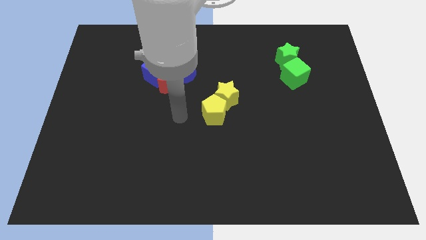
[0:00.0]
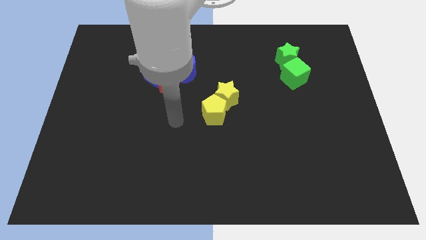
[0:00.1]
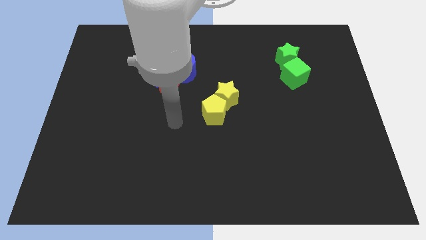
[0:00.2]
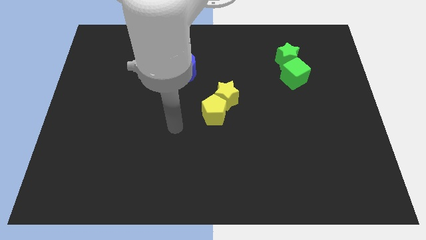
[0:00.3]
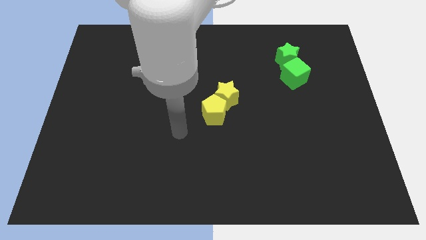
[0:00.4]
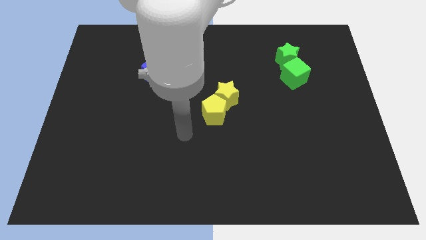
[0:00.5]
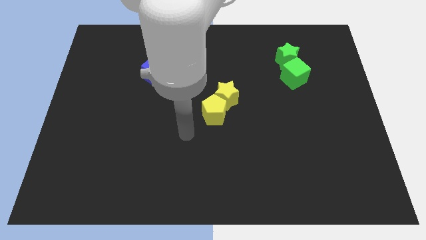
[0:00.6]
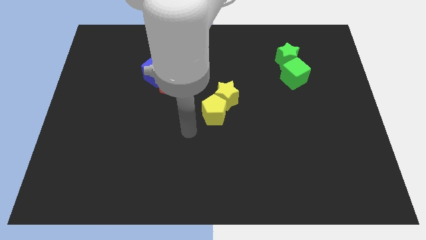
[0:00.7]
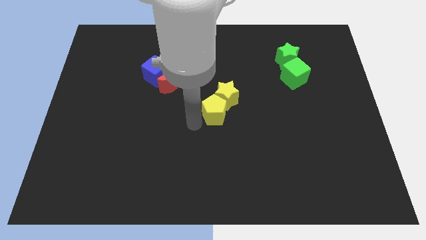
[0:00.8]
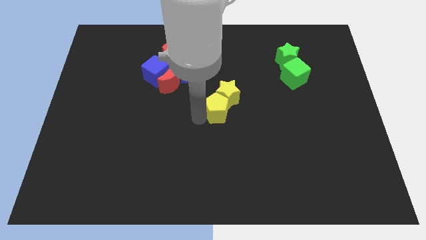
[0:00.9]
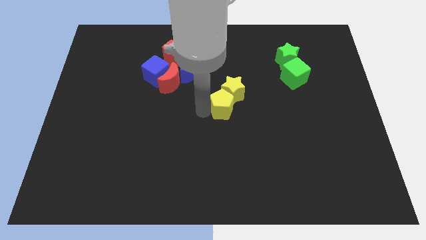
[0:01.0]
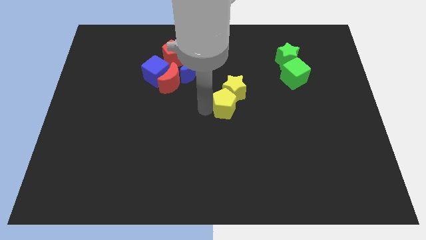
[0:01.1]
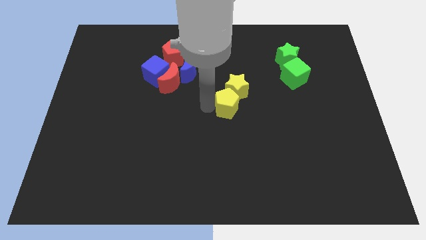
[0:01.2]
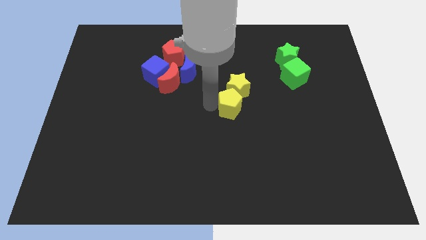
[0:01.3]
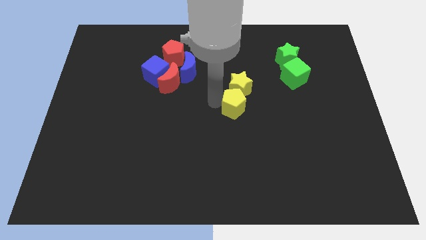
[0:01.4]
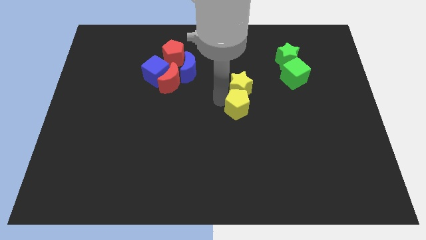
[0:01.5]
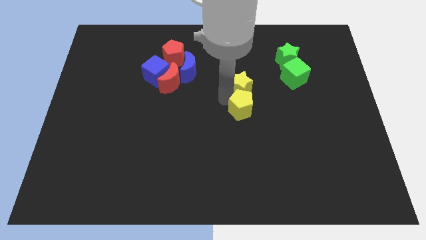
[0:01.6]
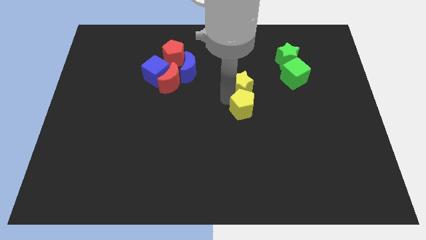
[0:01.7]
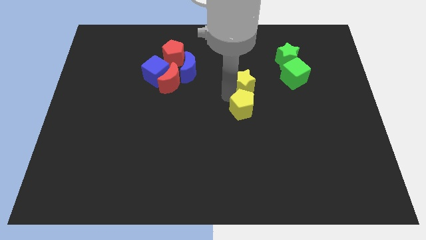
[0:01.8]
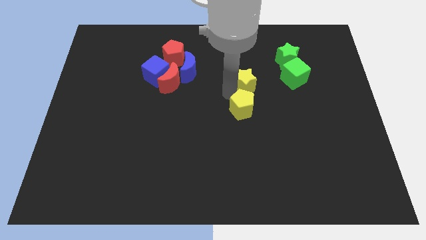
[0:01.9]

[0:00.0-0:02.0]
push the yellow blocks towards the green blocks

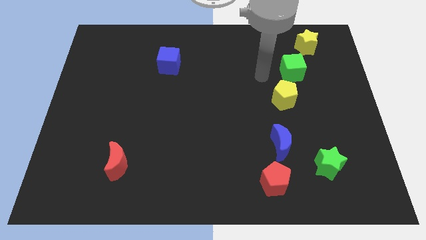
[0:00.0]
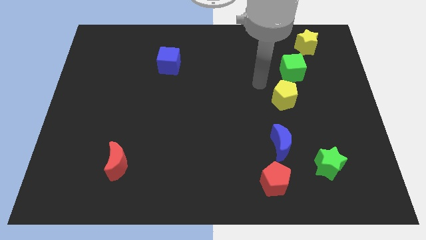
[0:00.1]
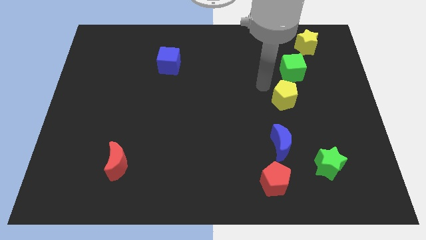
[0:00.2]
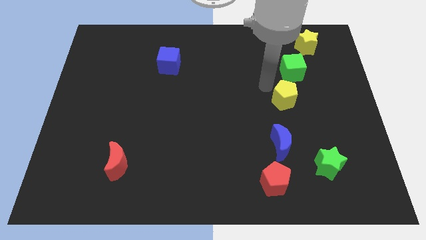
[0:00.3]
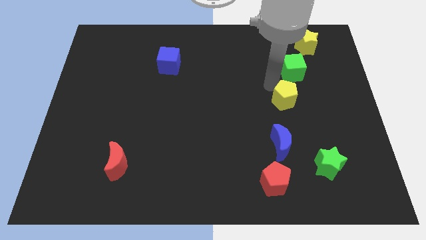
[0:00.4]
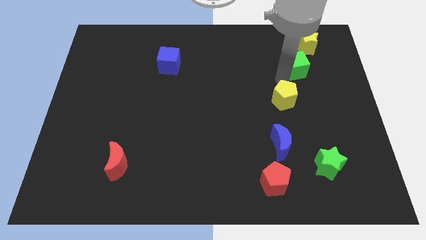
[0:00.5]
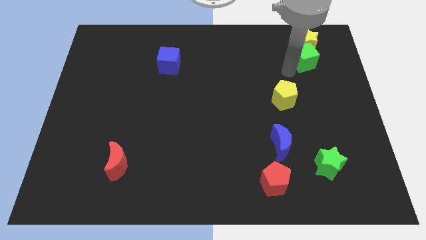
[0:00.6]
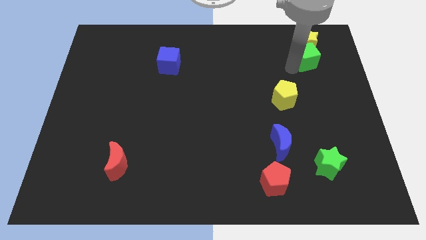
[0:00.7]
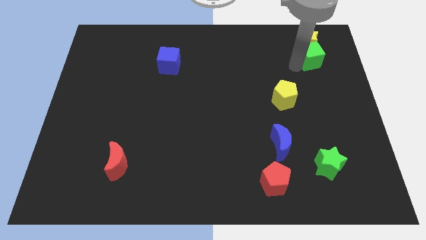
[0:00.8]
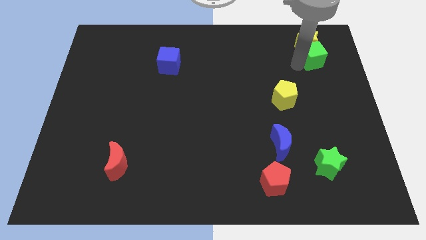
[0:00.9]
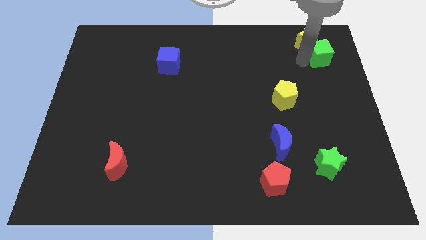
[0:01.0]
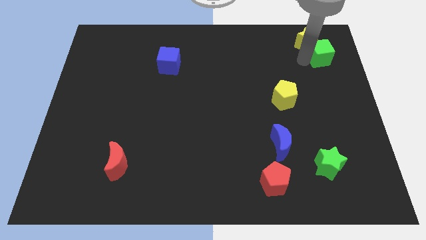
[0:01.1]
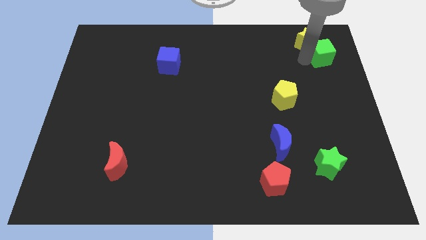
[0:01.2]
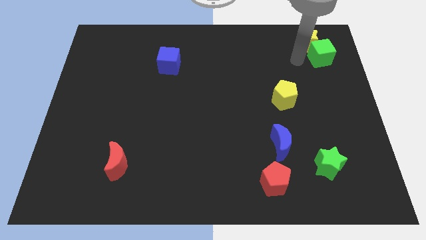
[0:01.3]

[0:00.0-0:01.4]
place green cube below the yellow star

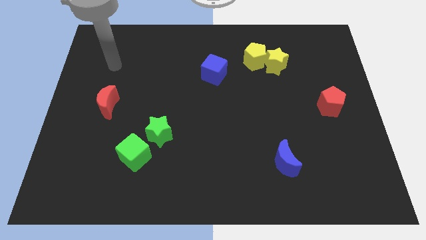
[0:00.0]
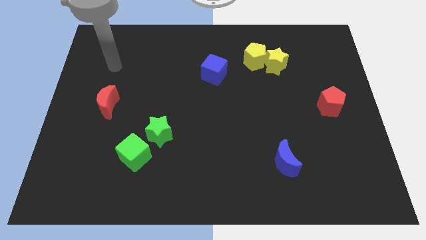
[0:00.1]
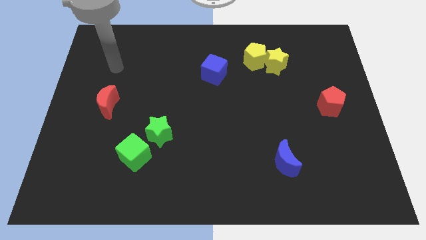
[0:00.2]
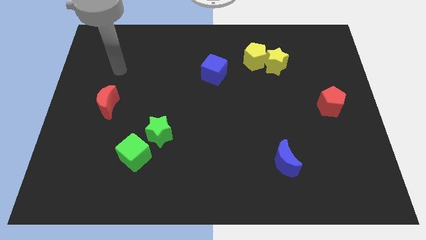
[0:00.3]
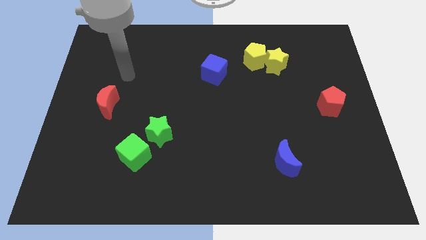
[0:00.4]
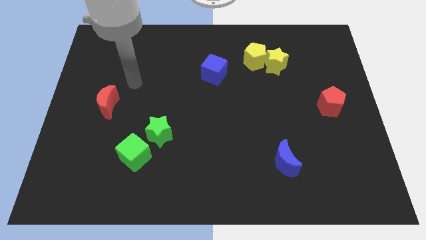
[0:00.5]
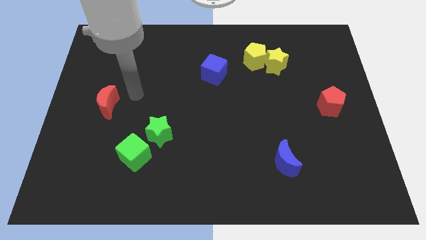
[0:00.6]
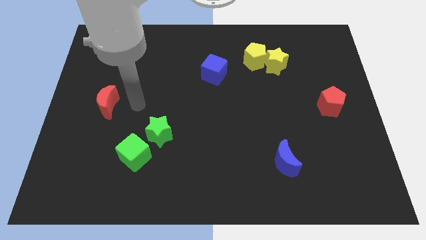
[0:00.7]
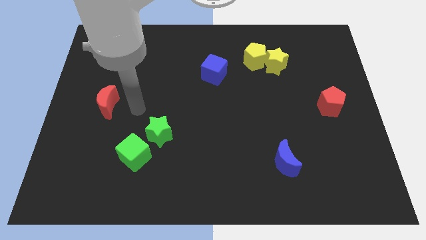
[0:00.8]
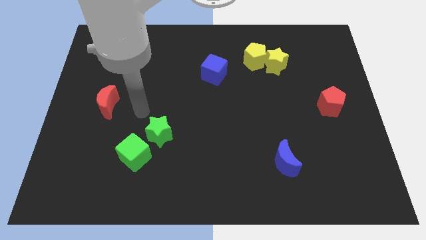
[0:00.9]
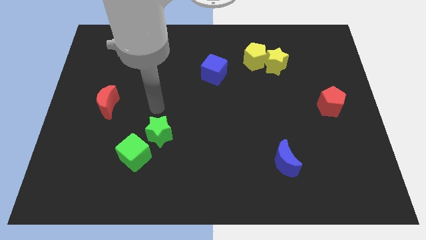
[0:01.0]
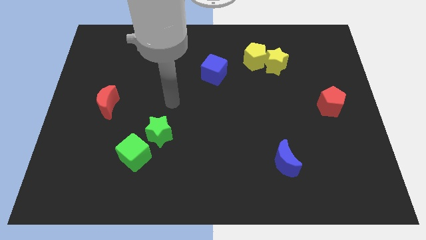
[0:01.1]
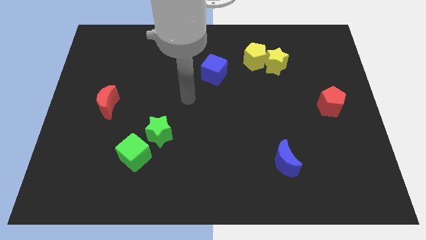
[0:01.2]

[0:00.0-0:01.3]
move your arm diagonally at the bottom of the blue cube

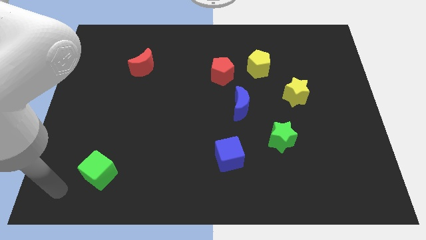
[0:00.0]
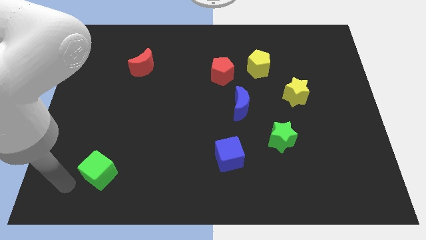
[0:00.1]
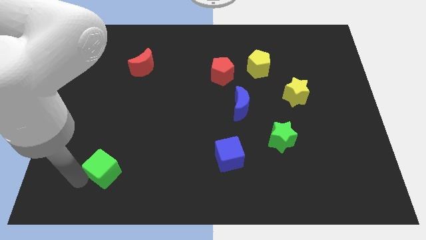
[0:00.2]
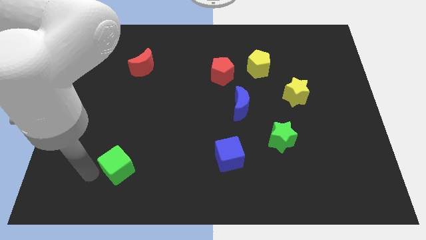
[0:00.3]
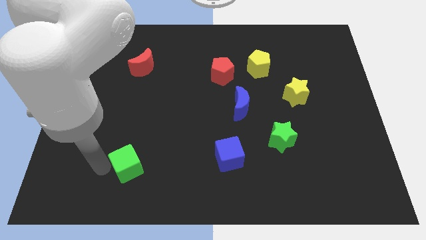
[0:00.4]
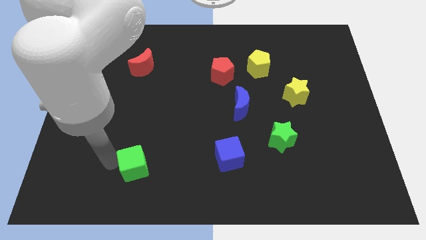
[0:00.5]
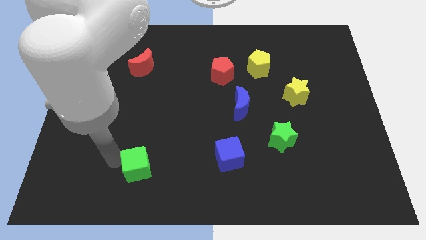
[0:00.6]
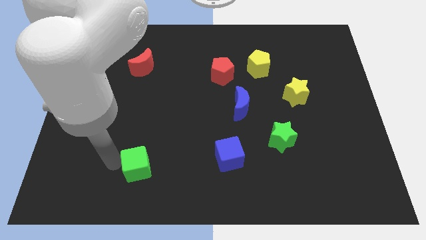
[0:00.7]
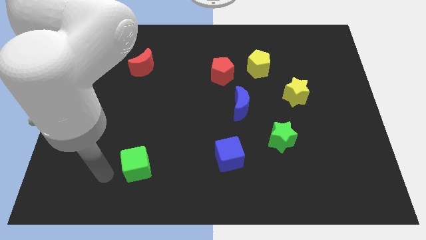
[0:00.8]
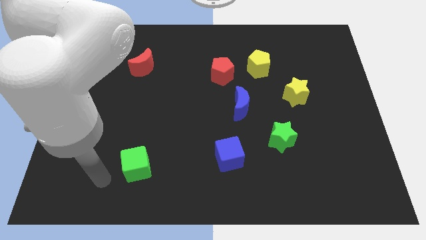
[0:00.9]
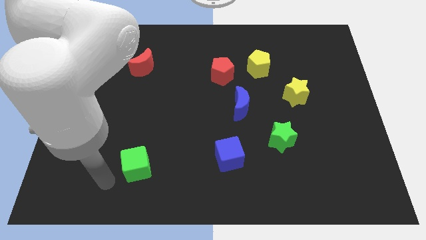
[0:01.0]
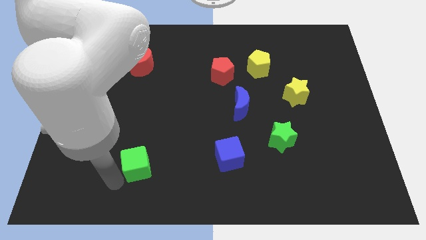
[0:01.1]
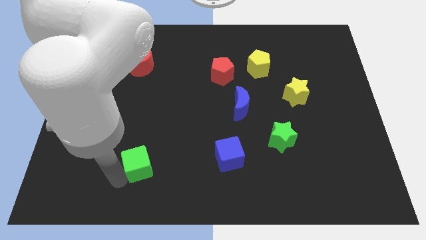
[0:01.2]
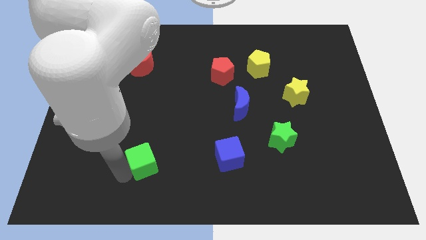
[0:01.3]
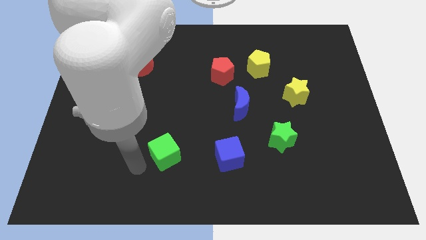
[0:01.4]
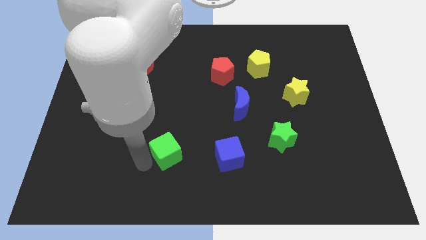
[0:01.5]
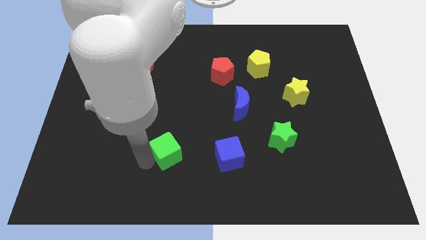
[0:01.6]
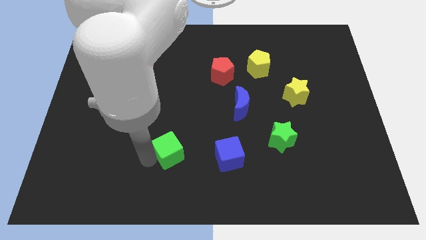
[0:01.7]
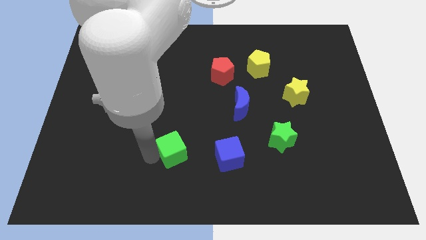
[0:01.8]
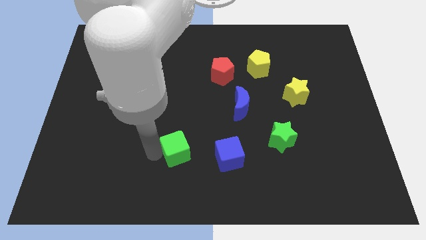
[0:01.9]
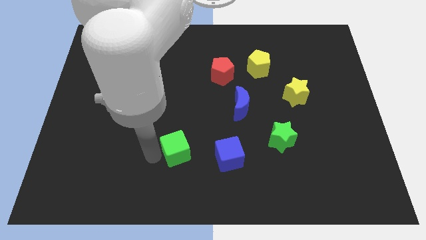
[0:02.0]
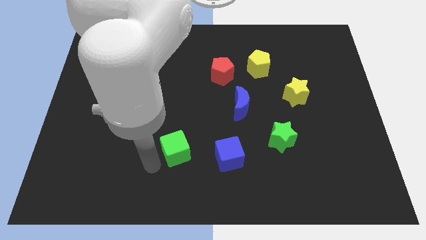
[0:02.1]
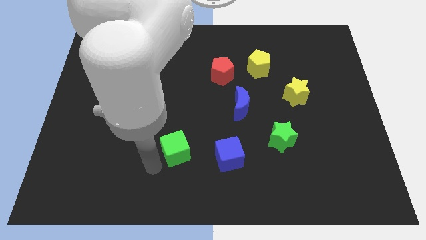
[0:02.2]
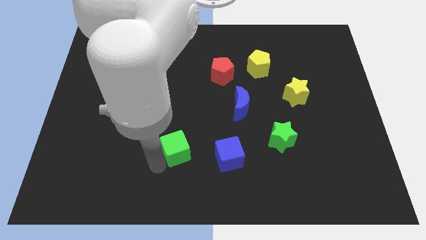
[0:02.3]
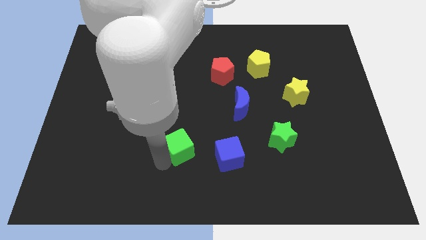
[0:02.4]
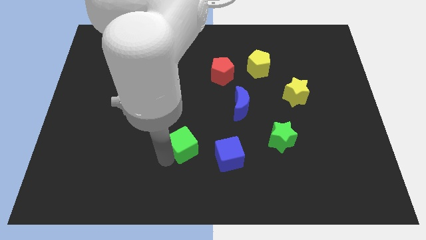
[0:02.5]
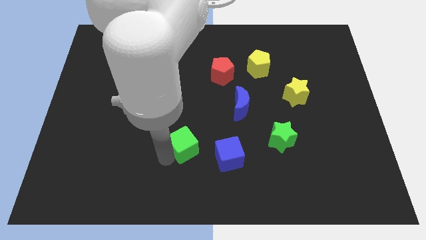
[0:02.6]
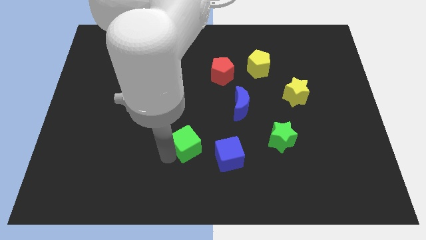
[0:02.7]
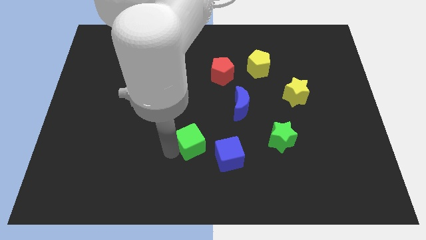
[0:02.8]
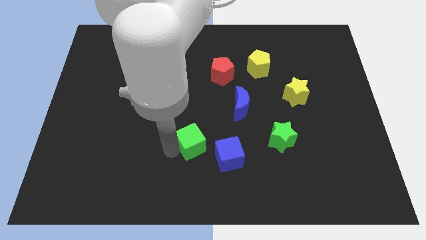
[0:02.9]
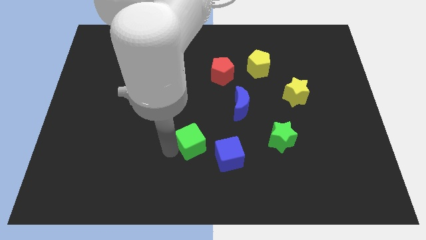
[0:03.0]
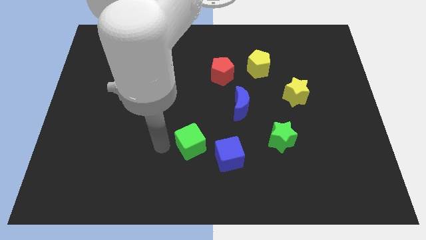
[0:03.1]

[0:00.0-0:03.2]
move the green cube parallel to green star

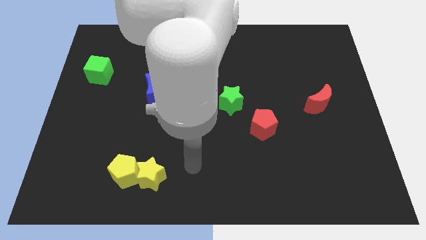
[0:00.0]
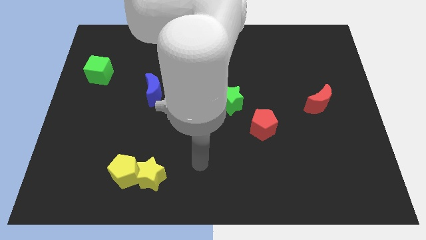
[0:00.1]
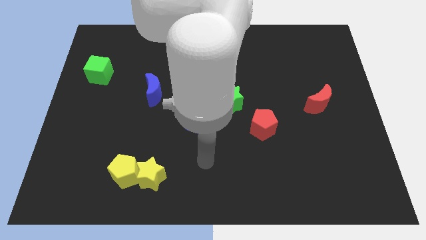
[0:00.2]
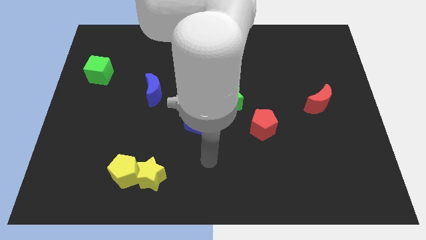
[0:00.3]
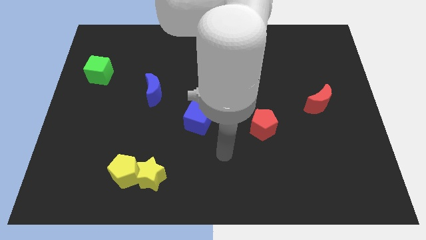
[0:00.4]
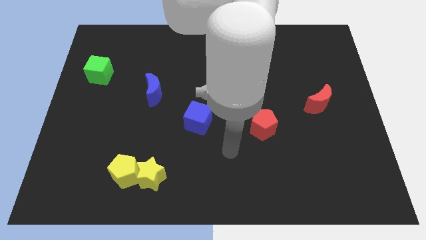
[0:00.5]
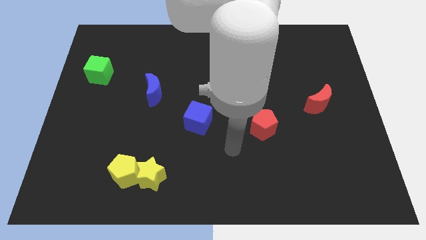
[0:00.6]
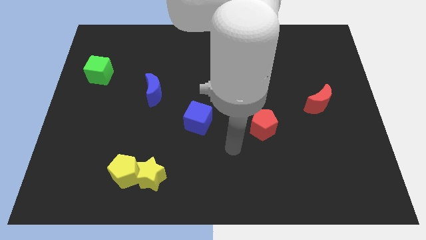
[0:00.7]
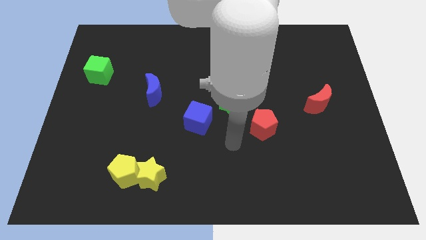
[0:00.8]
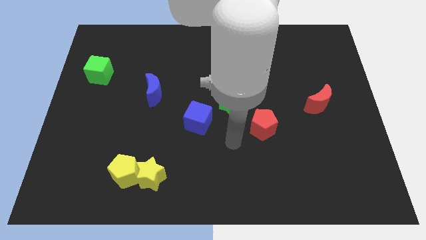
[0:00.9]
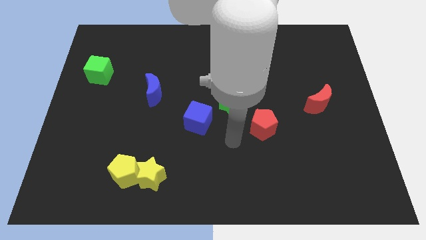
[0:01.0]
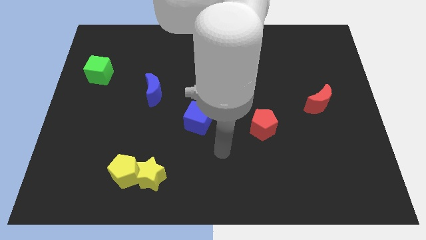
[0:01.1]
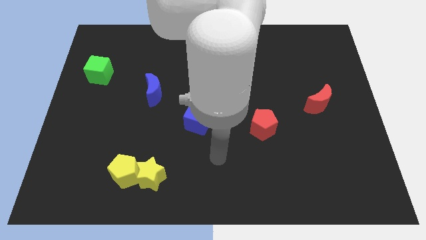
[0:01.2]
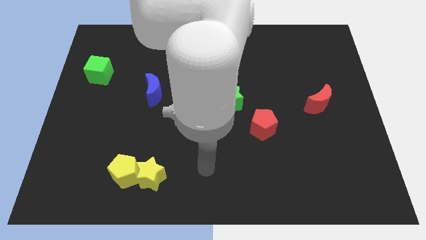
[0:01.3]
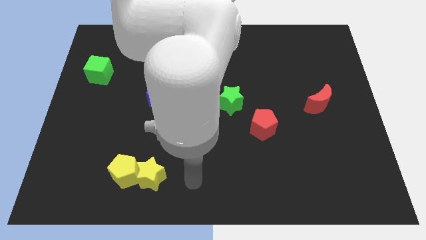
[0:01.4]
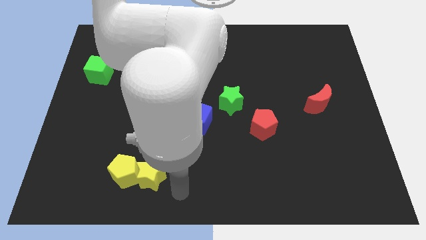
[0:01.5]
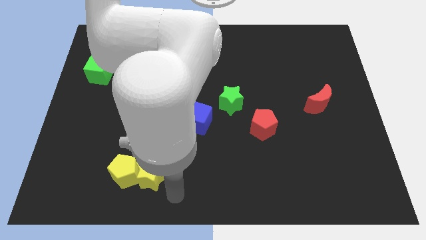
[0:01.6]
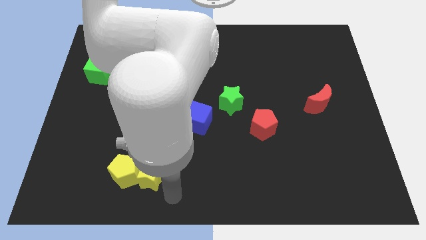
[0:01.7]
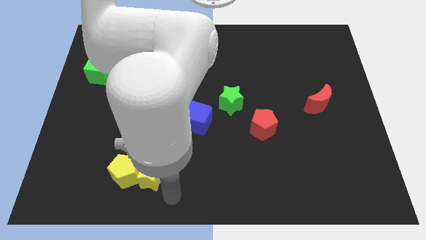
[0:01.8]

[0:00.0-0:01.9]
move your arm to the right side of the yellow star
